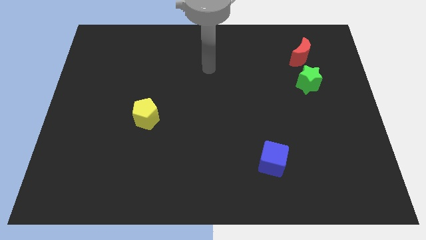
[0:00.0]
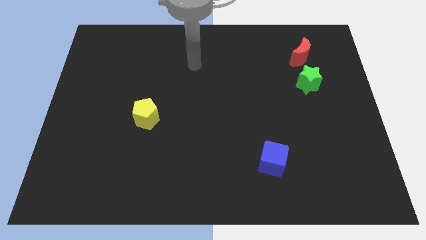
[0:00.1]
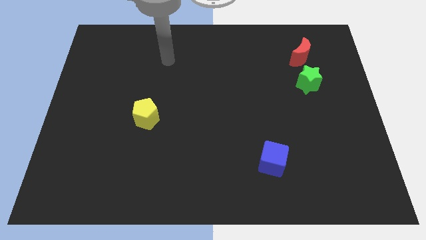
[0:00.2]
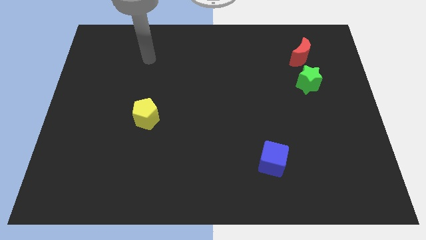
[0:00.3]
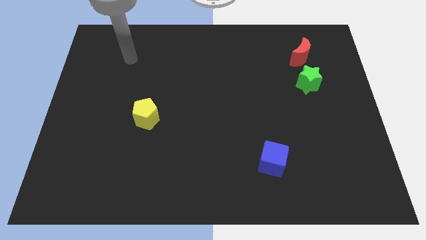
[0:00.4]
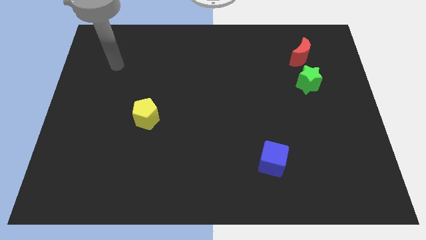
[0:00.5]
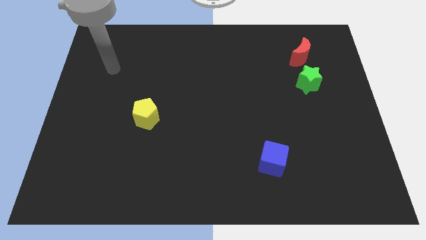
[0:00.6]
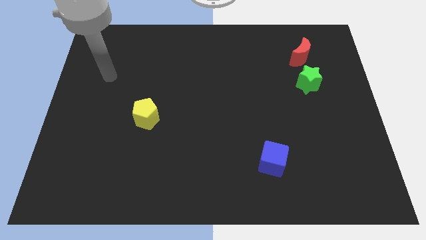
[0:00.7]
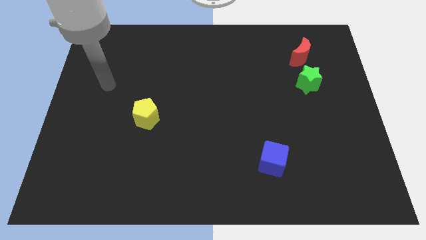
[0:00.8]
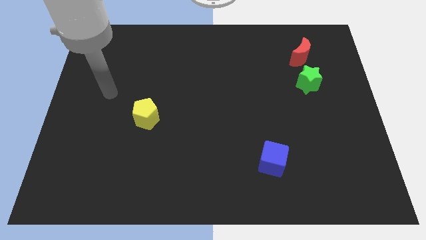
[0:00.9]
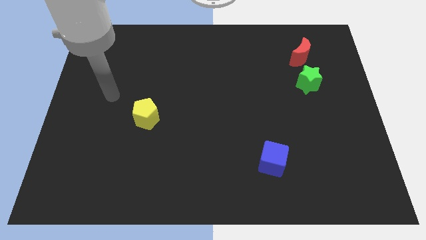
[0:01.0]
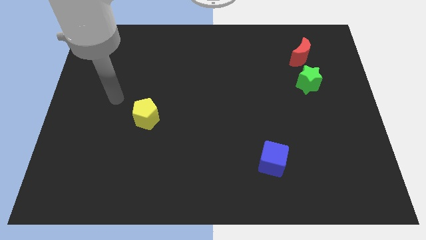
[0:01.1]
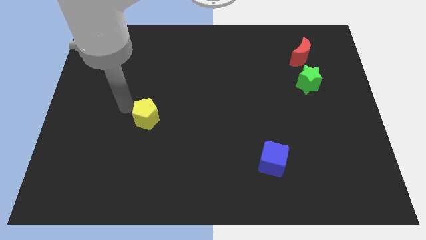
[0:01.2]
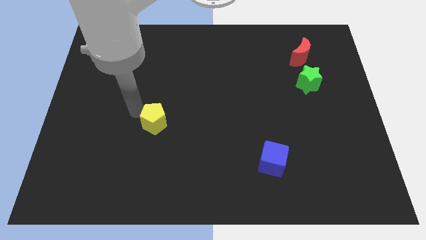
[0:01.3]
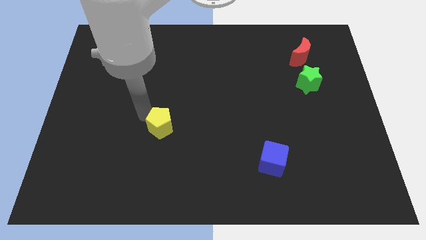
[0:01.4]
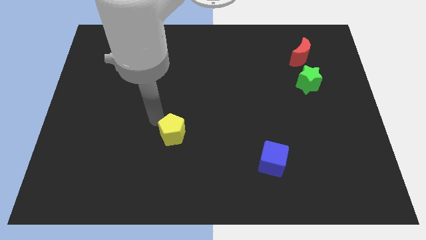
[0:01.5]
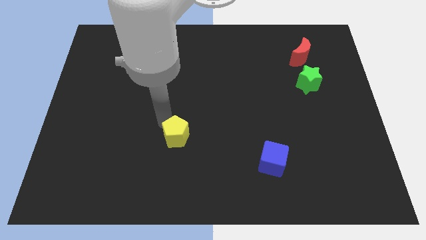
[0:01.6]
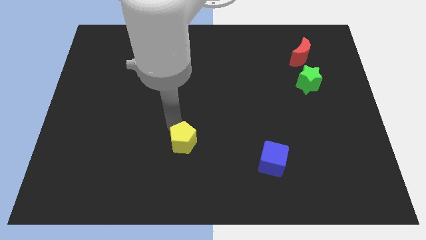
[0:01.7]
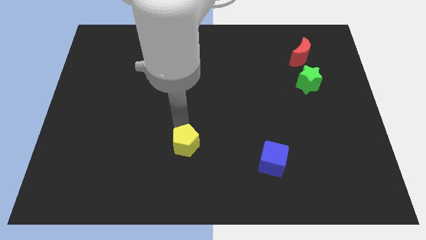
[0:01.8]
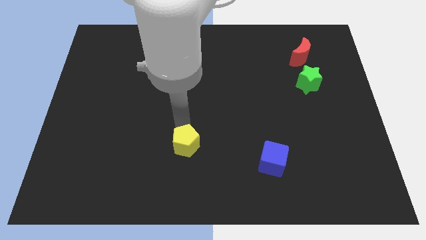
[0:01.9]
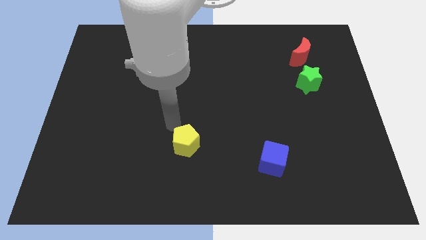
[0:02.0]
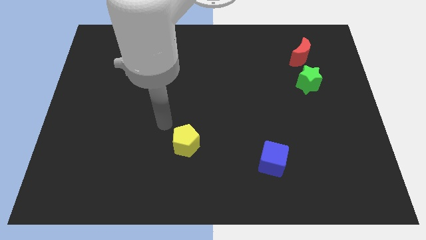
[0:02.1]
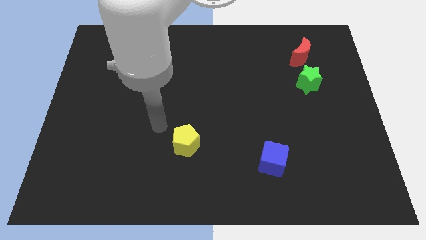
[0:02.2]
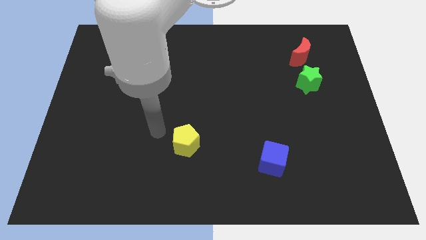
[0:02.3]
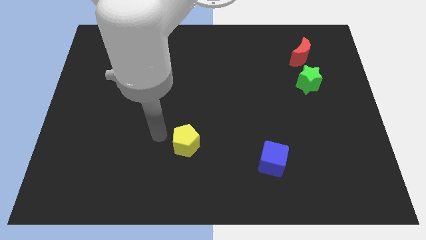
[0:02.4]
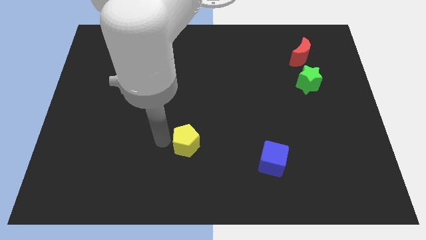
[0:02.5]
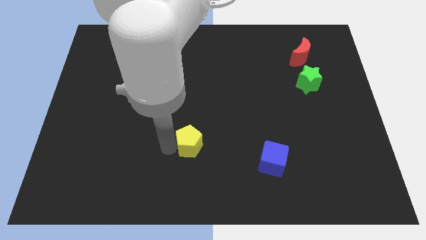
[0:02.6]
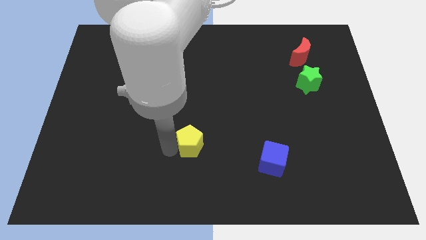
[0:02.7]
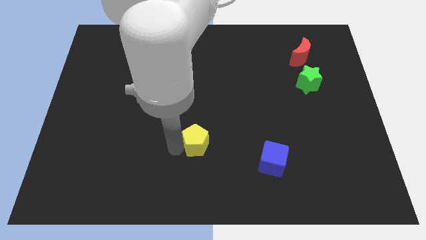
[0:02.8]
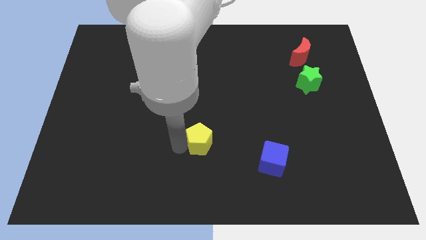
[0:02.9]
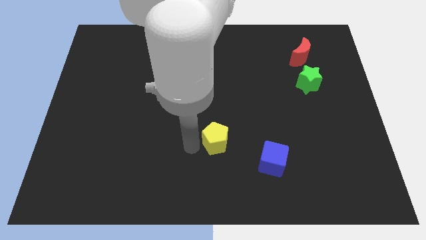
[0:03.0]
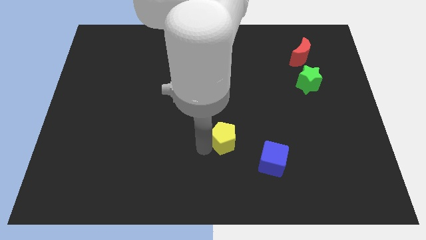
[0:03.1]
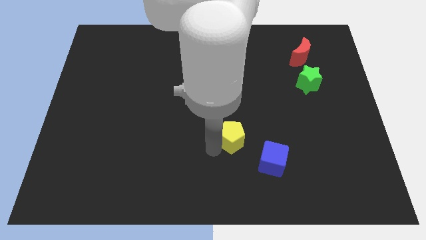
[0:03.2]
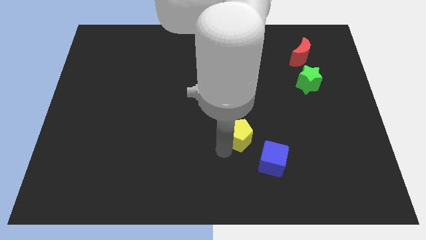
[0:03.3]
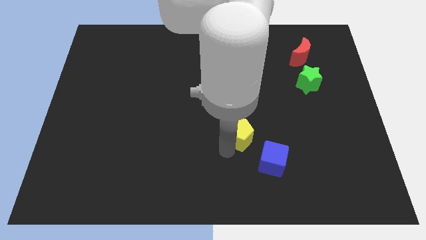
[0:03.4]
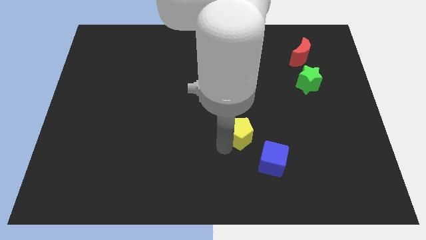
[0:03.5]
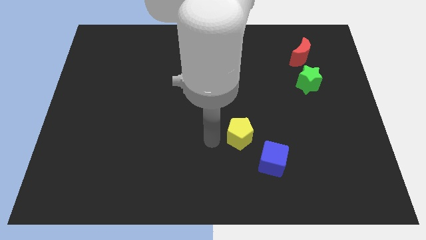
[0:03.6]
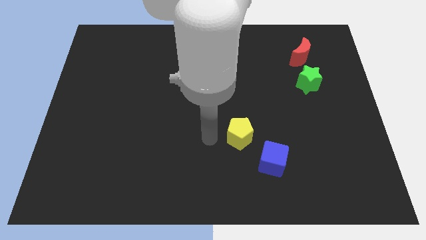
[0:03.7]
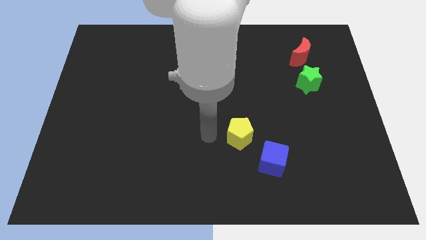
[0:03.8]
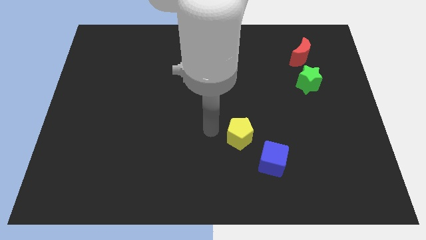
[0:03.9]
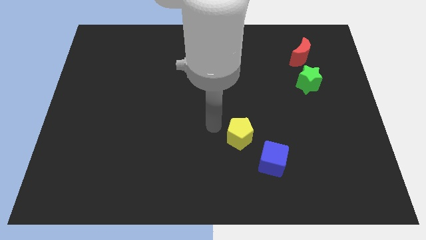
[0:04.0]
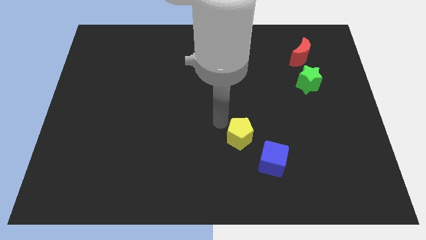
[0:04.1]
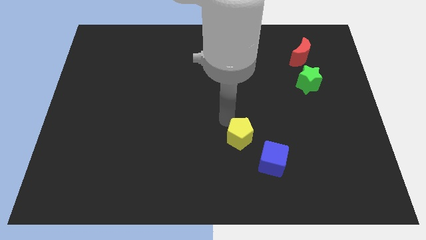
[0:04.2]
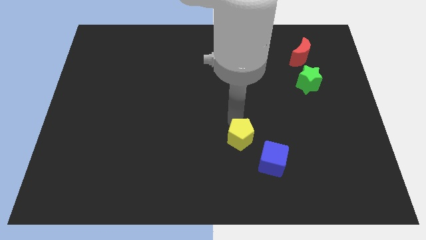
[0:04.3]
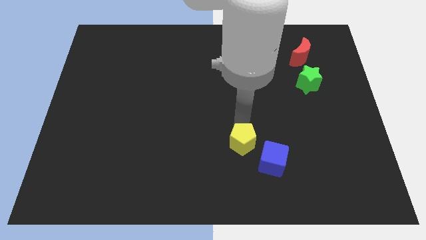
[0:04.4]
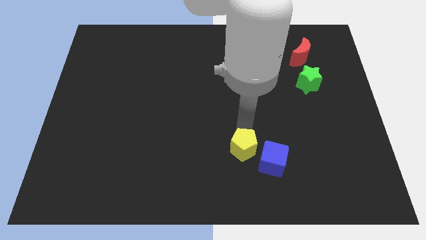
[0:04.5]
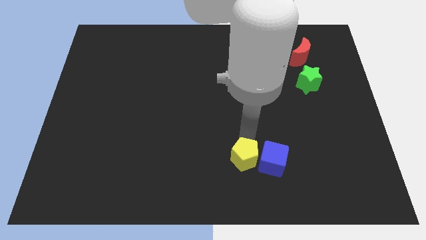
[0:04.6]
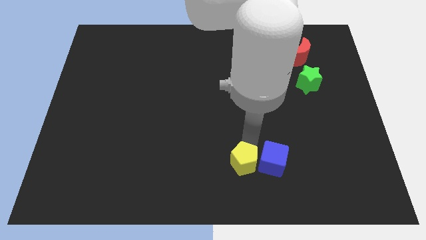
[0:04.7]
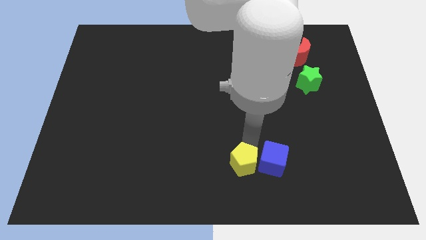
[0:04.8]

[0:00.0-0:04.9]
move the yellow block next to the blue block

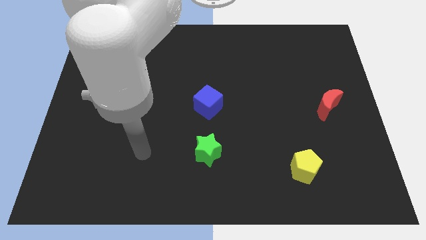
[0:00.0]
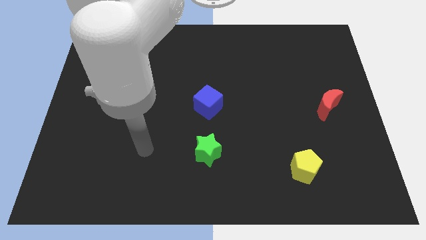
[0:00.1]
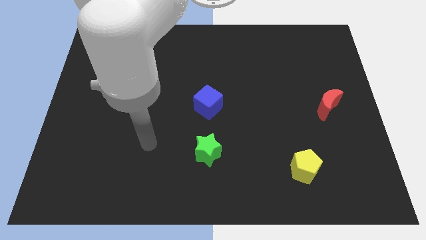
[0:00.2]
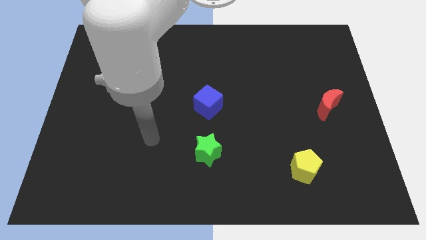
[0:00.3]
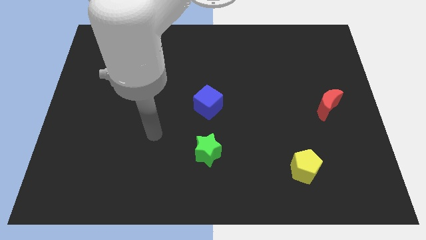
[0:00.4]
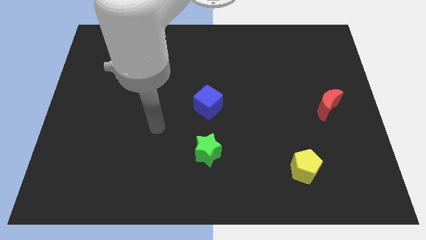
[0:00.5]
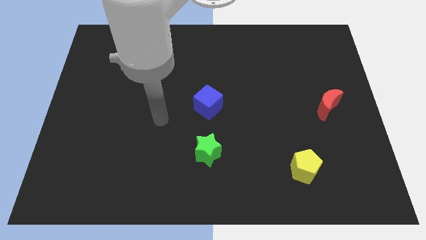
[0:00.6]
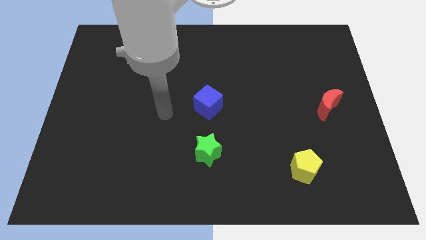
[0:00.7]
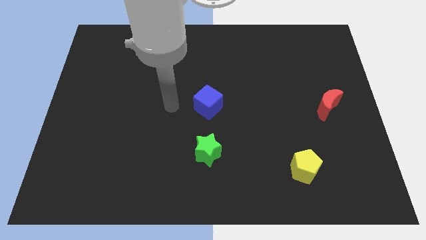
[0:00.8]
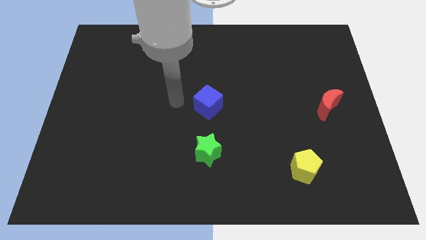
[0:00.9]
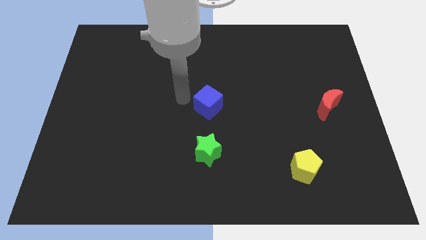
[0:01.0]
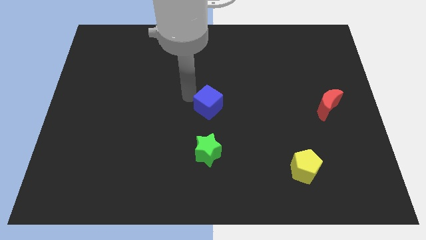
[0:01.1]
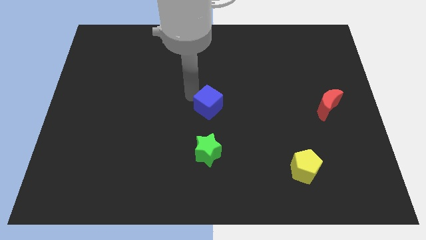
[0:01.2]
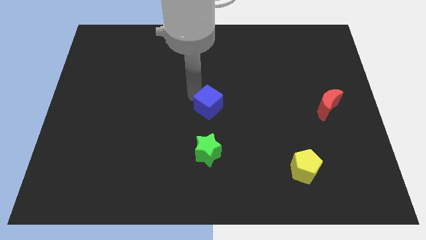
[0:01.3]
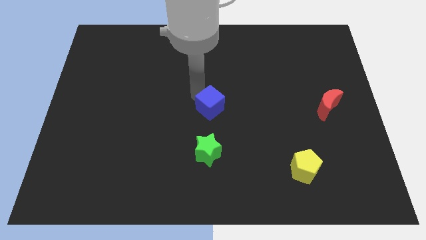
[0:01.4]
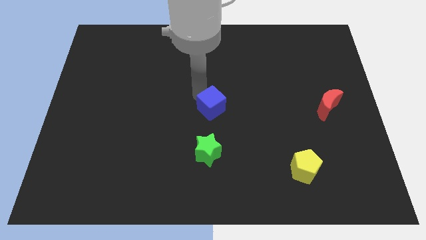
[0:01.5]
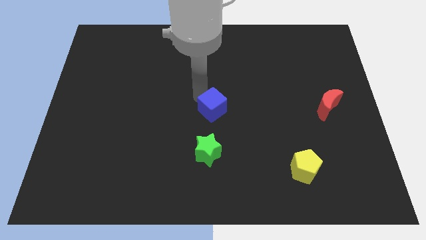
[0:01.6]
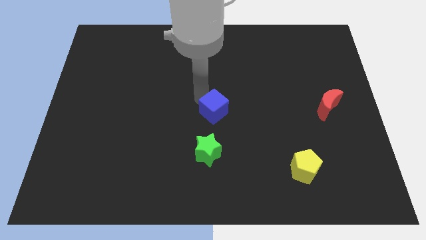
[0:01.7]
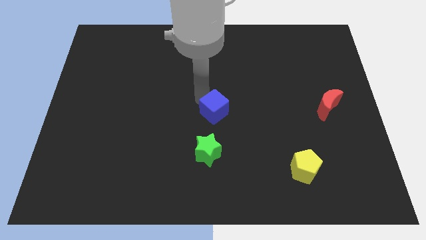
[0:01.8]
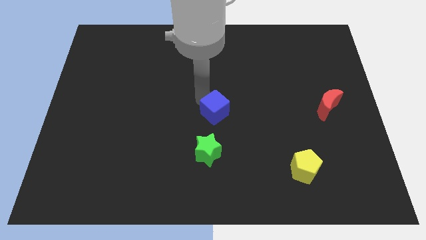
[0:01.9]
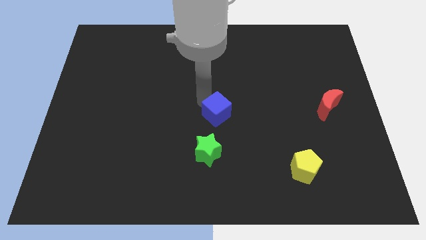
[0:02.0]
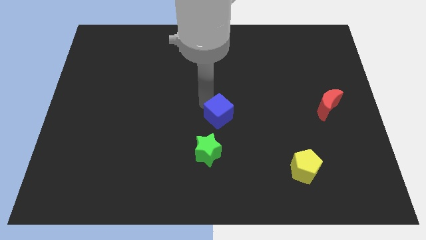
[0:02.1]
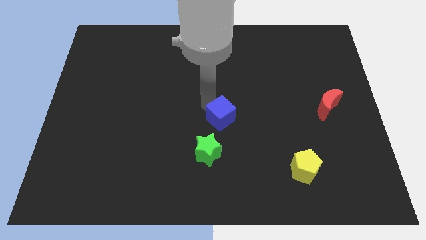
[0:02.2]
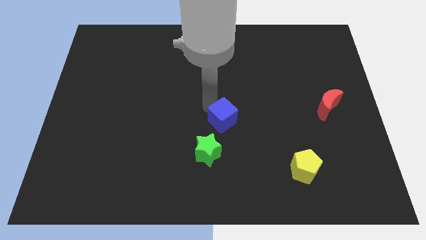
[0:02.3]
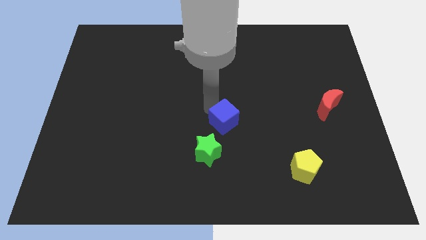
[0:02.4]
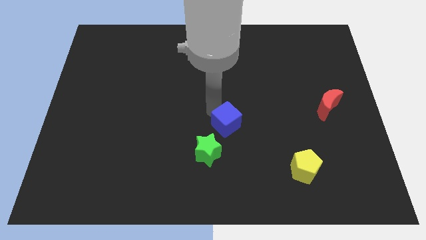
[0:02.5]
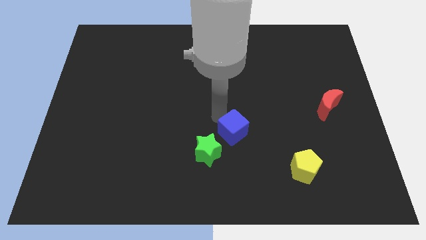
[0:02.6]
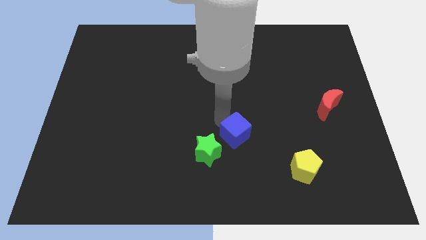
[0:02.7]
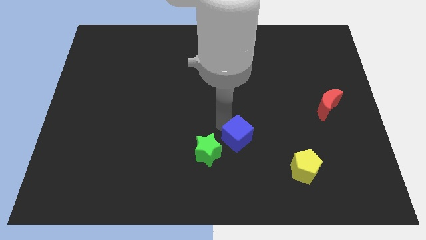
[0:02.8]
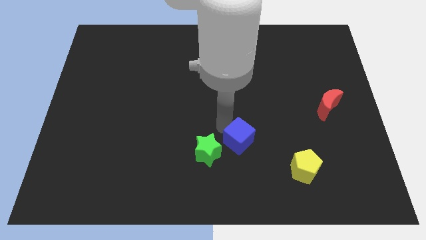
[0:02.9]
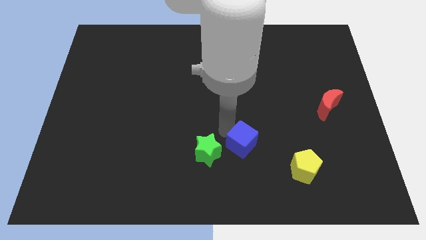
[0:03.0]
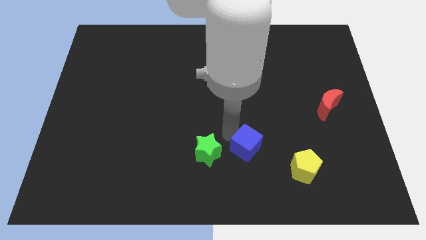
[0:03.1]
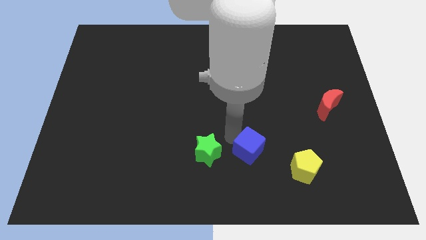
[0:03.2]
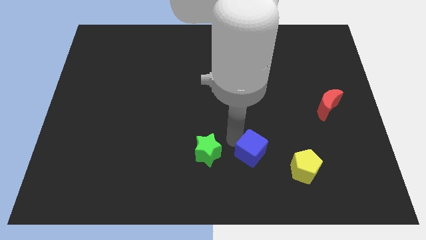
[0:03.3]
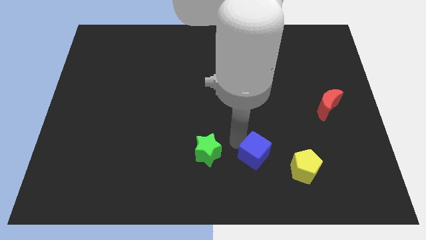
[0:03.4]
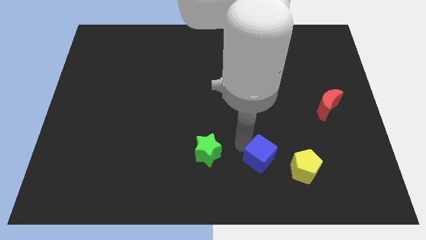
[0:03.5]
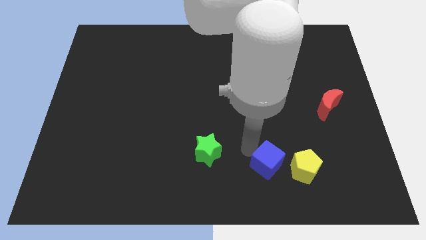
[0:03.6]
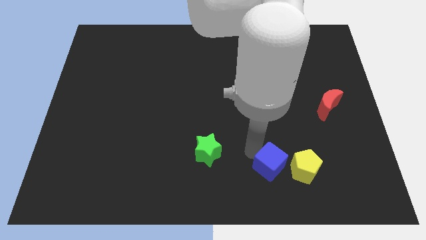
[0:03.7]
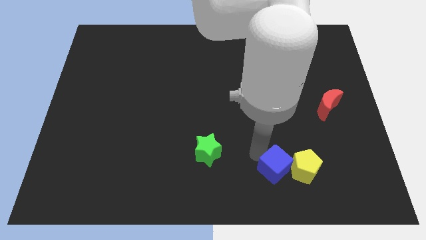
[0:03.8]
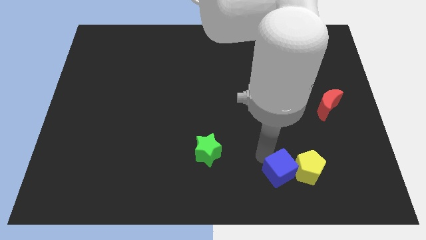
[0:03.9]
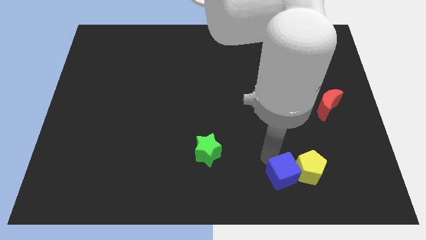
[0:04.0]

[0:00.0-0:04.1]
put the blue block to the pentagon
